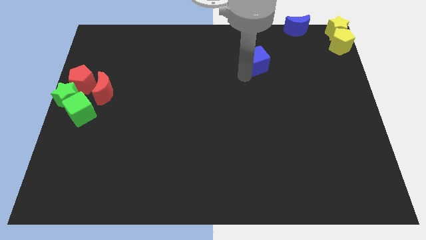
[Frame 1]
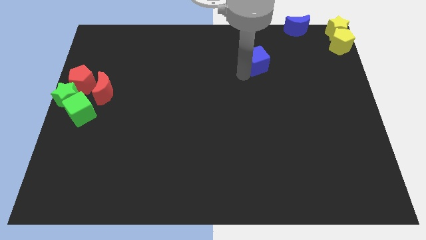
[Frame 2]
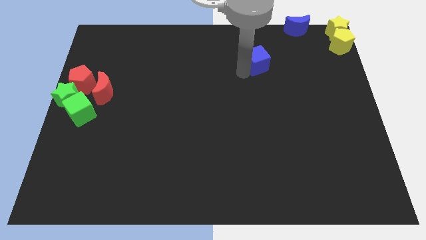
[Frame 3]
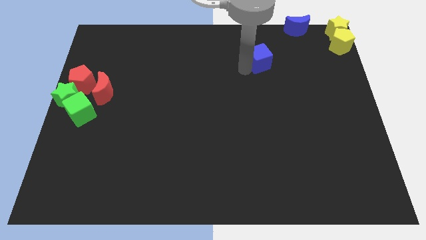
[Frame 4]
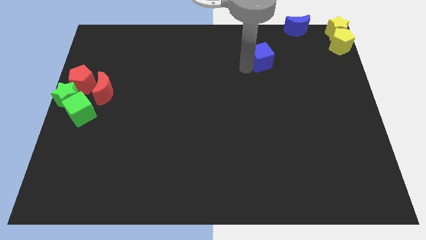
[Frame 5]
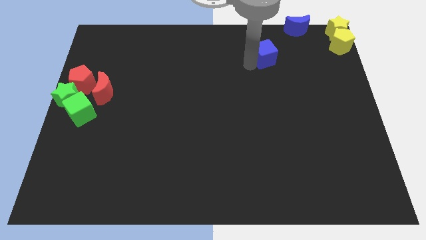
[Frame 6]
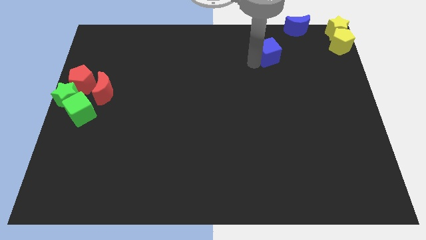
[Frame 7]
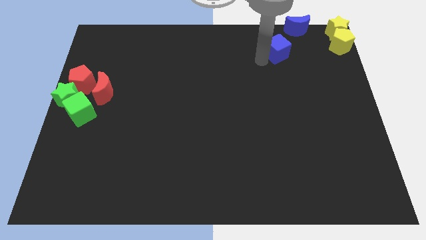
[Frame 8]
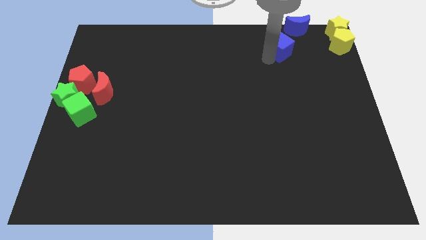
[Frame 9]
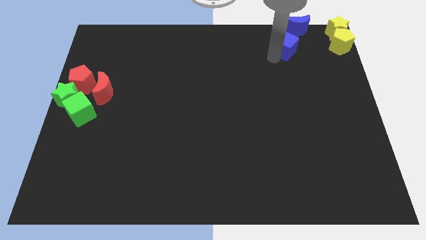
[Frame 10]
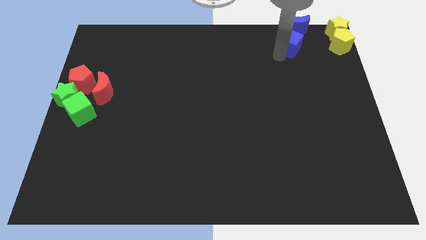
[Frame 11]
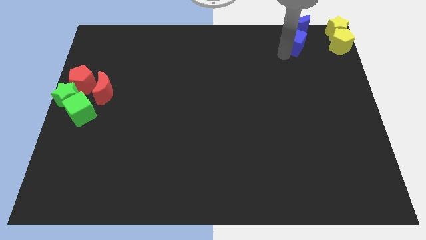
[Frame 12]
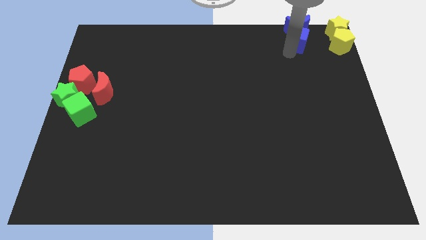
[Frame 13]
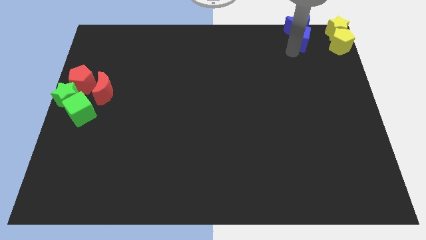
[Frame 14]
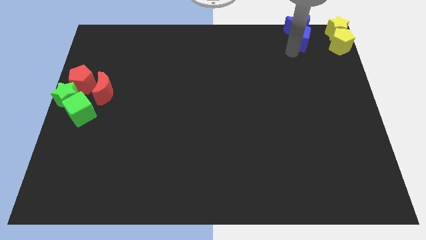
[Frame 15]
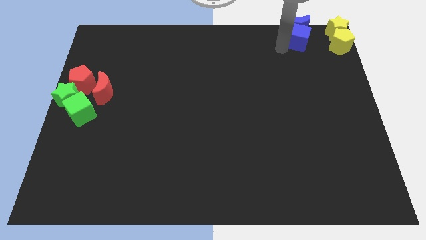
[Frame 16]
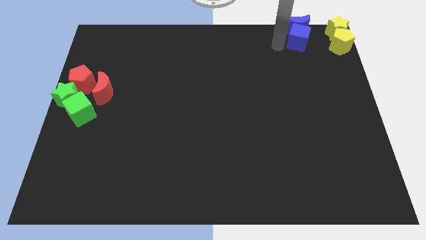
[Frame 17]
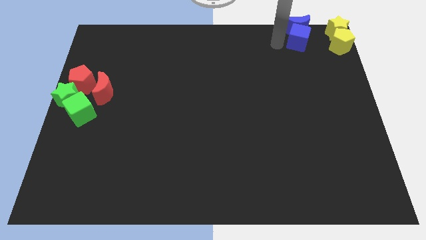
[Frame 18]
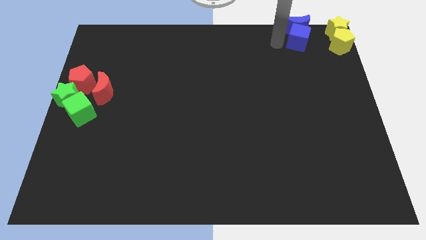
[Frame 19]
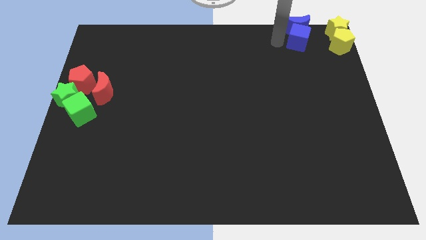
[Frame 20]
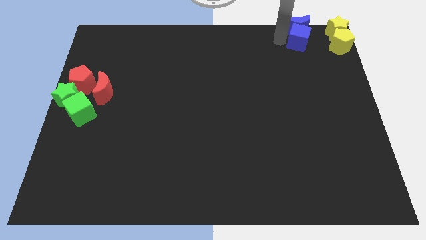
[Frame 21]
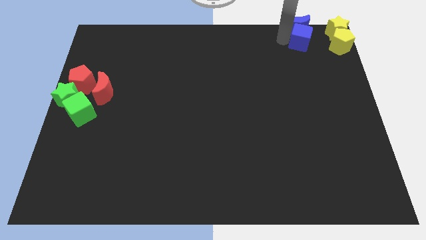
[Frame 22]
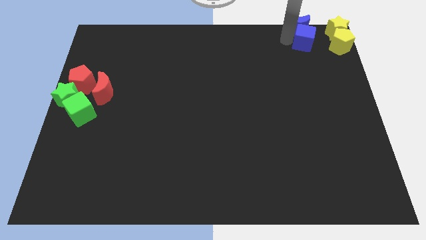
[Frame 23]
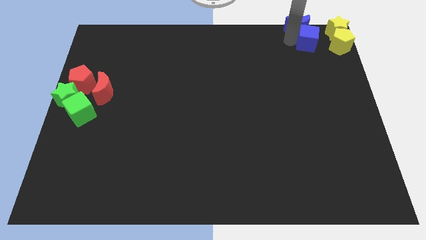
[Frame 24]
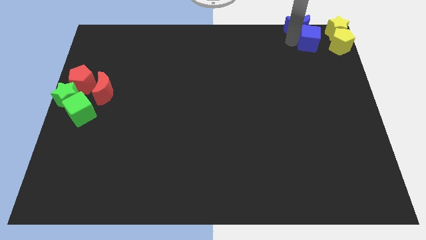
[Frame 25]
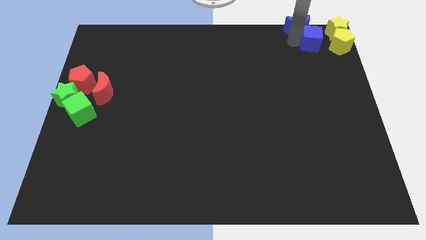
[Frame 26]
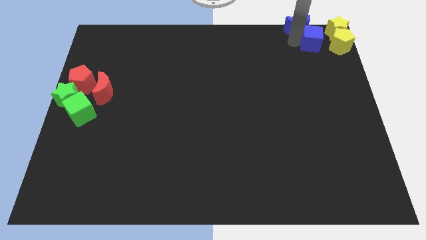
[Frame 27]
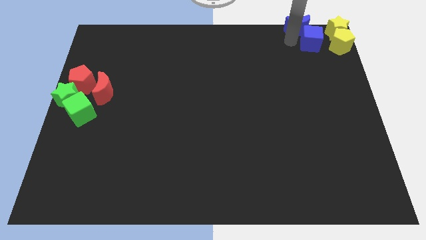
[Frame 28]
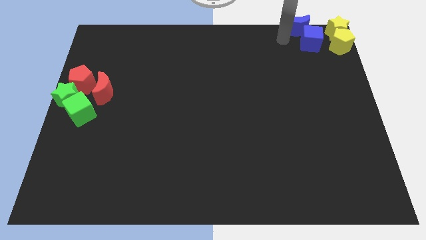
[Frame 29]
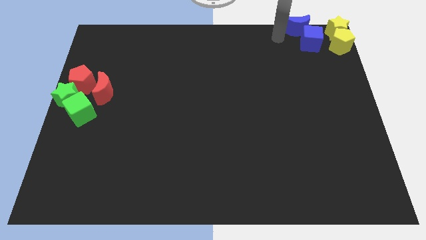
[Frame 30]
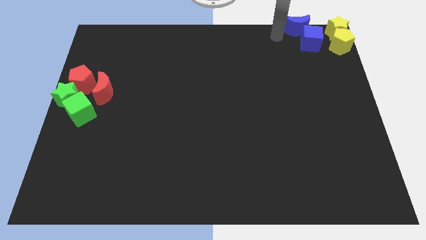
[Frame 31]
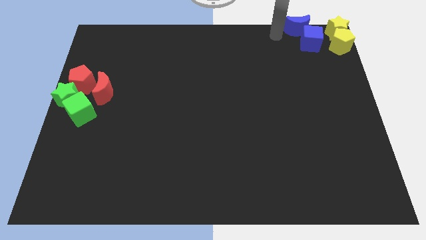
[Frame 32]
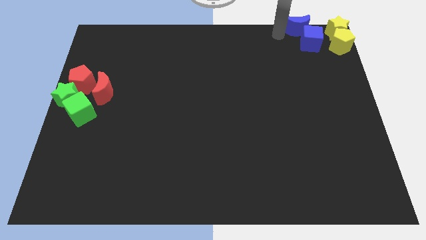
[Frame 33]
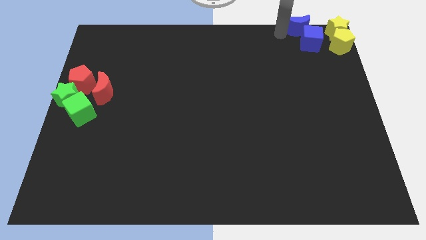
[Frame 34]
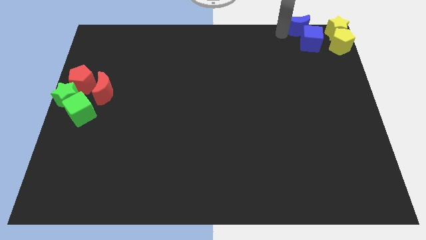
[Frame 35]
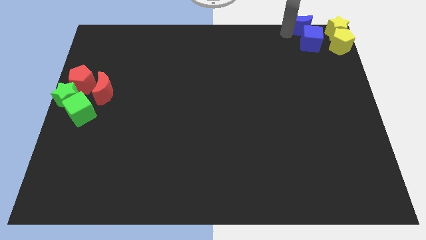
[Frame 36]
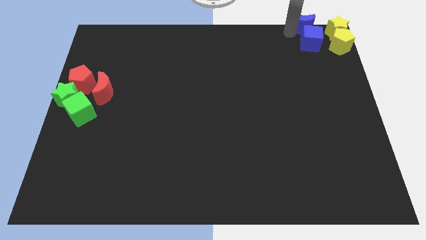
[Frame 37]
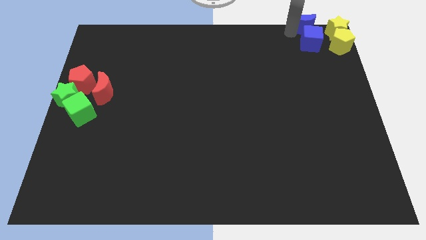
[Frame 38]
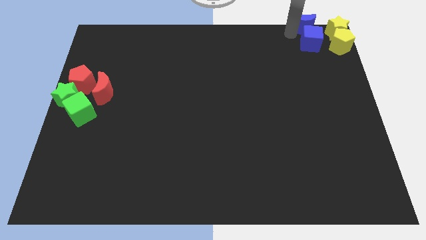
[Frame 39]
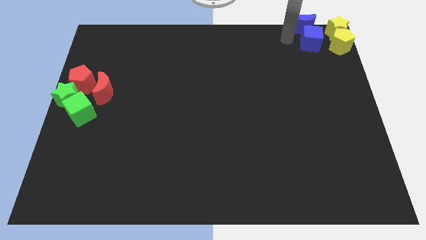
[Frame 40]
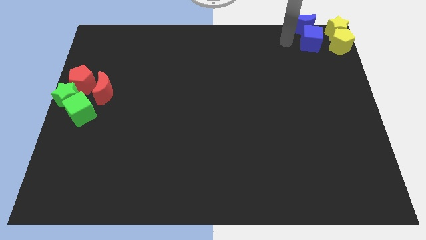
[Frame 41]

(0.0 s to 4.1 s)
place blue cube below the blue moon

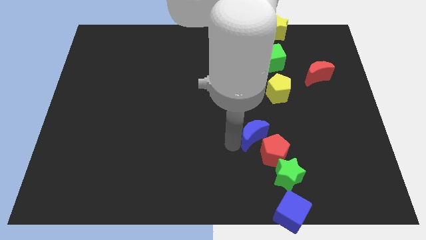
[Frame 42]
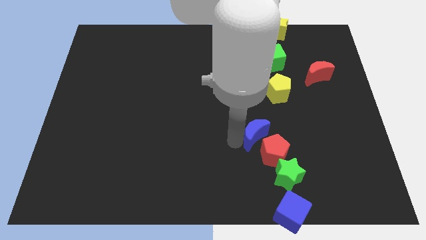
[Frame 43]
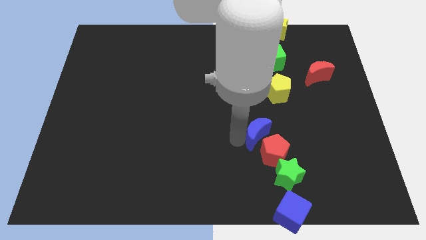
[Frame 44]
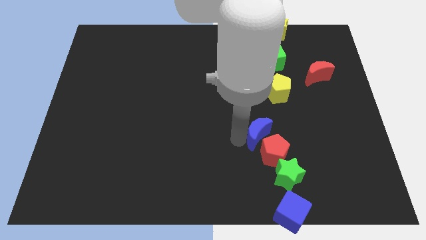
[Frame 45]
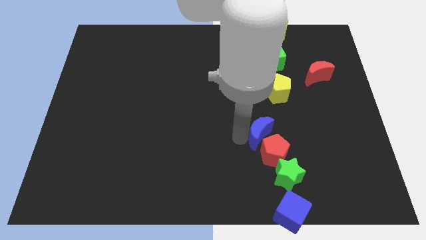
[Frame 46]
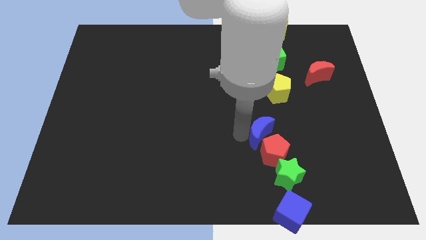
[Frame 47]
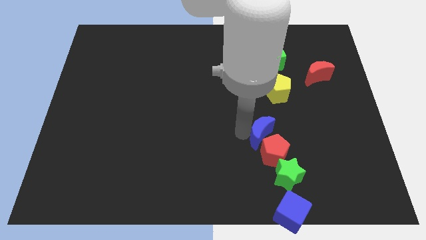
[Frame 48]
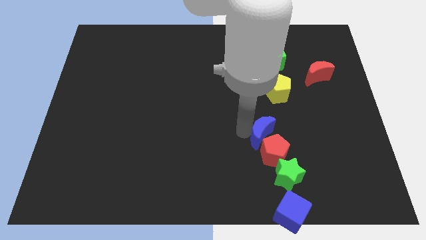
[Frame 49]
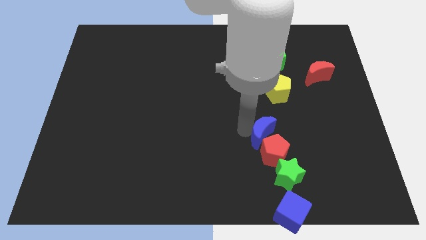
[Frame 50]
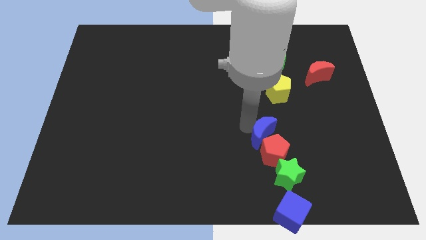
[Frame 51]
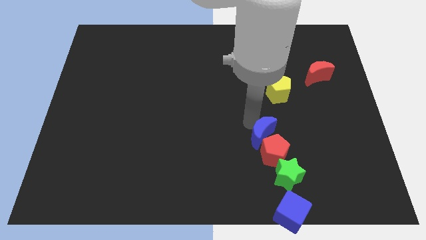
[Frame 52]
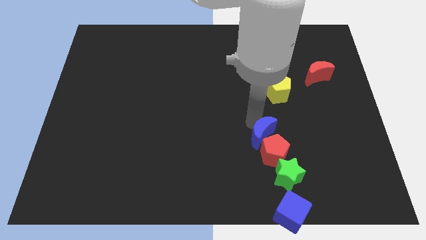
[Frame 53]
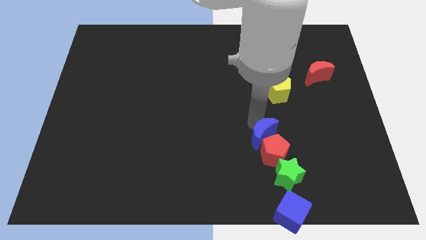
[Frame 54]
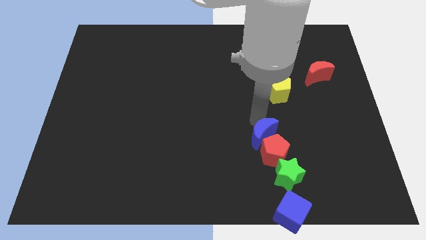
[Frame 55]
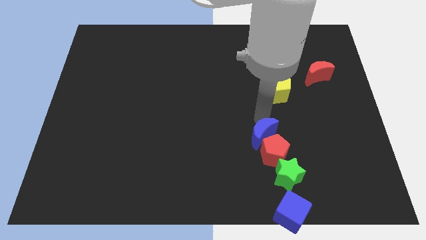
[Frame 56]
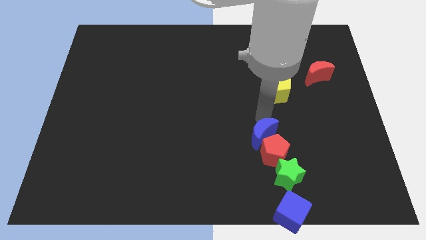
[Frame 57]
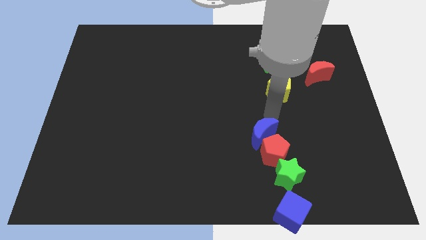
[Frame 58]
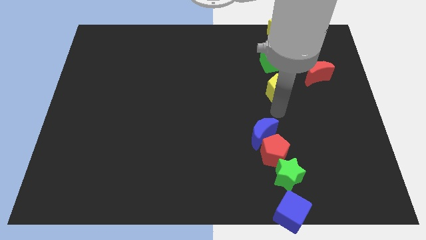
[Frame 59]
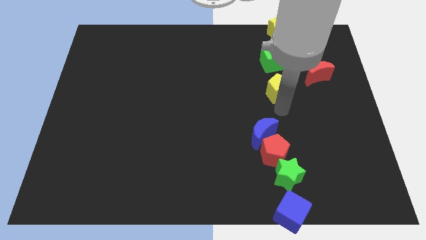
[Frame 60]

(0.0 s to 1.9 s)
place the blue crescent over the red pentagon

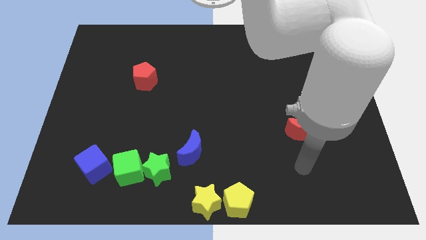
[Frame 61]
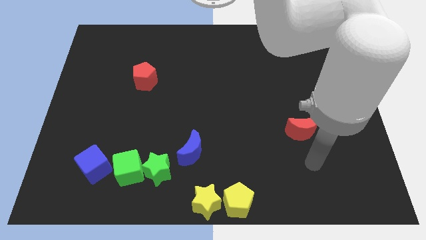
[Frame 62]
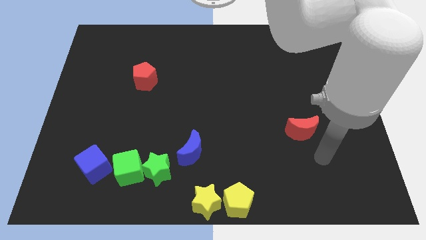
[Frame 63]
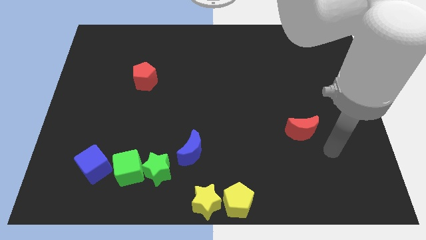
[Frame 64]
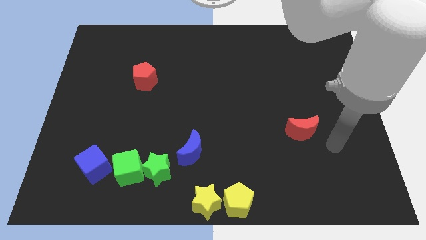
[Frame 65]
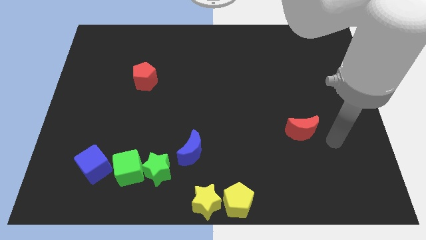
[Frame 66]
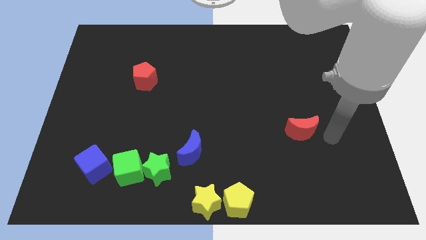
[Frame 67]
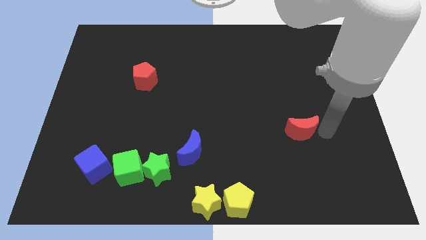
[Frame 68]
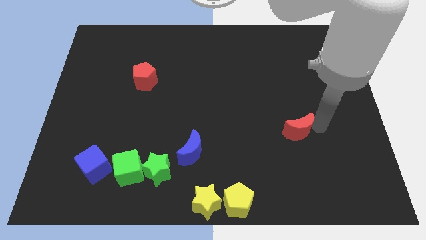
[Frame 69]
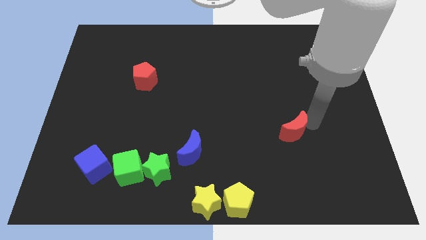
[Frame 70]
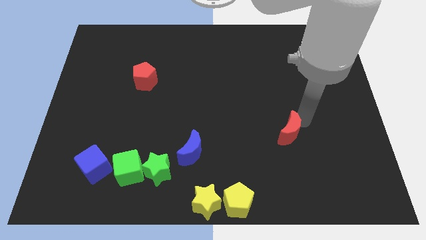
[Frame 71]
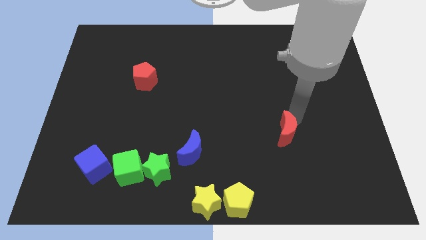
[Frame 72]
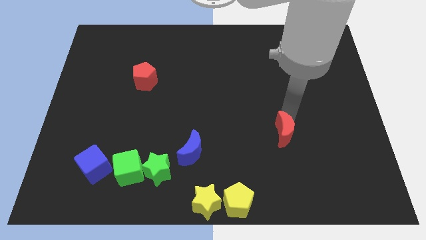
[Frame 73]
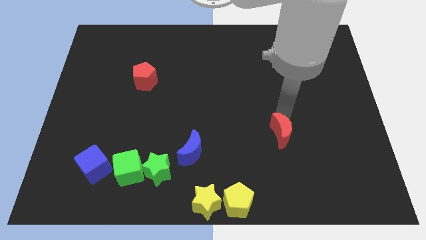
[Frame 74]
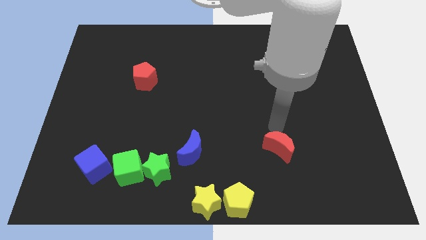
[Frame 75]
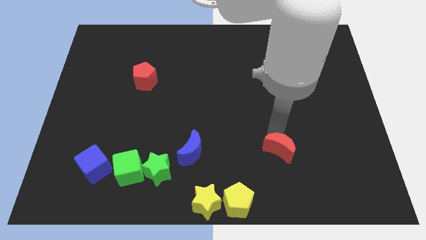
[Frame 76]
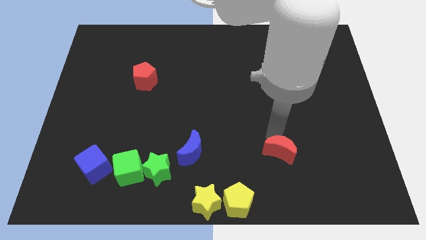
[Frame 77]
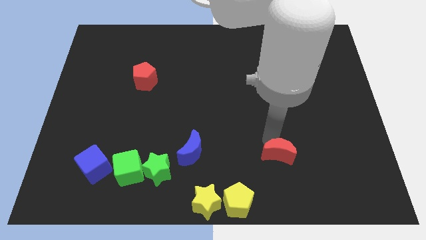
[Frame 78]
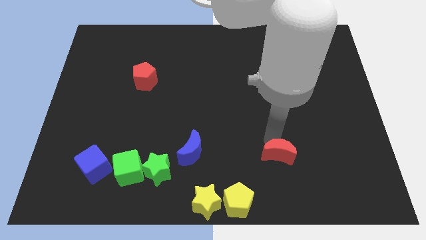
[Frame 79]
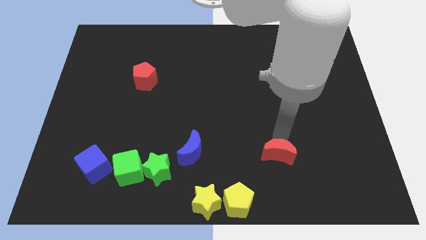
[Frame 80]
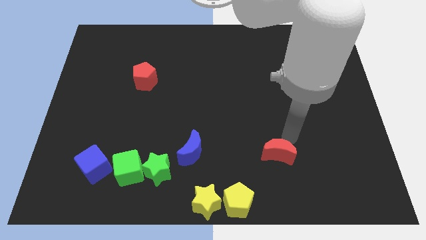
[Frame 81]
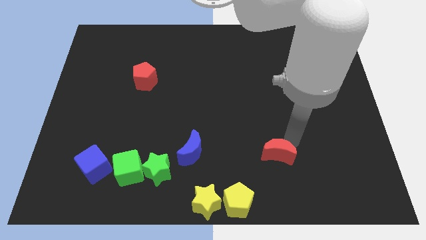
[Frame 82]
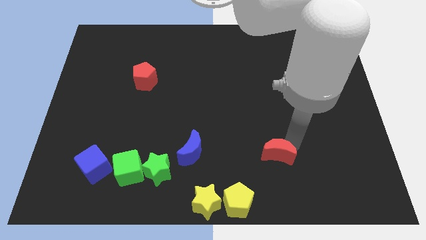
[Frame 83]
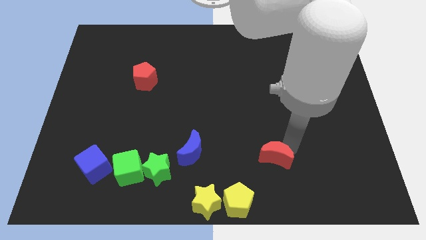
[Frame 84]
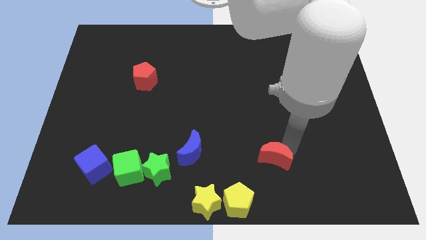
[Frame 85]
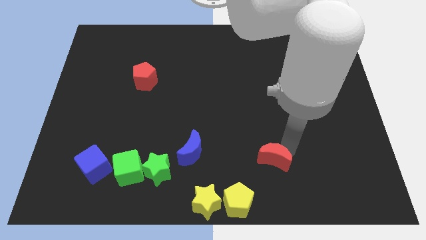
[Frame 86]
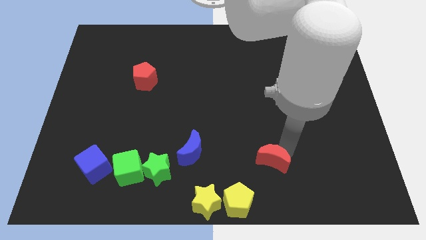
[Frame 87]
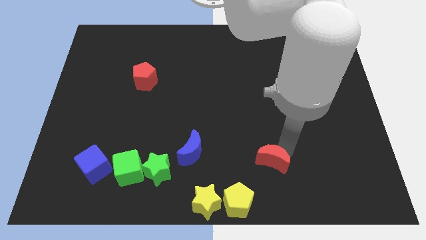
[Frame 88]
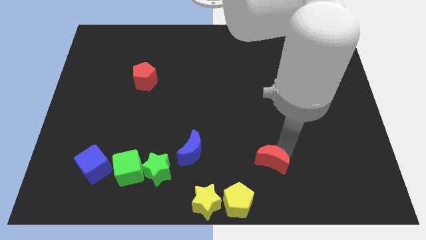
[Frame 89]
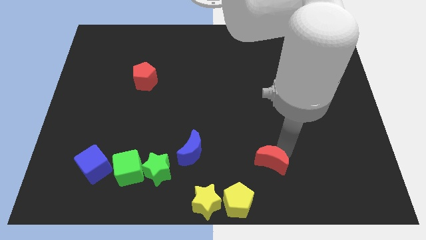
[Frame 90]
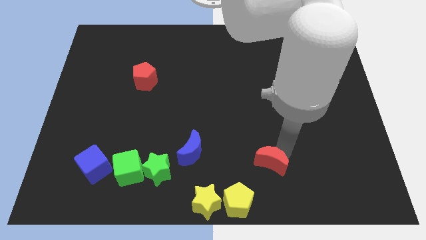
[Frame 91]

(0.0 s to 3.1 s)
push the red crescent towards bottom side
